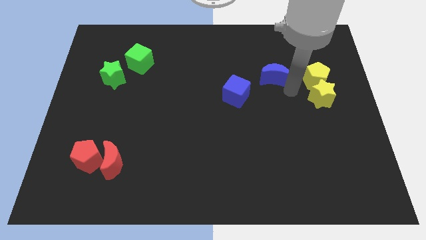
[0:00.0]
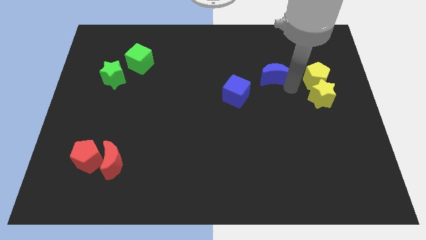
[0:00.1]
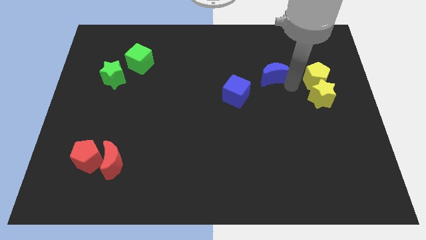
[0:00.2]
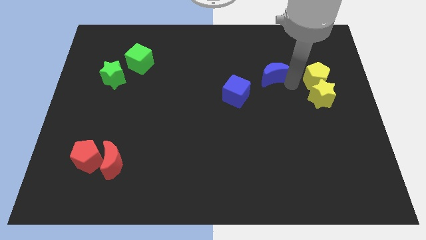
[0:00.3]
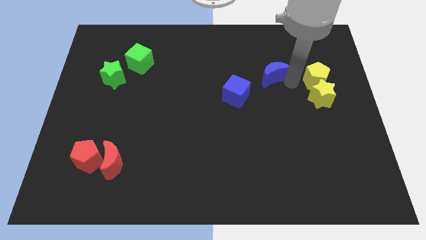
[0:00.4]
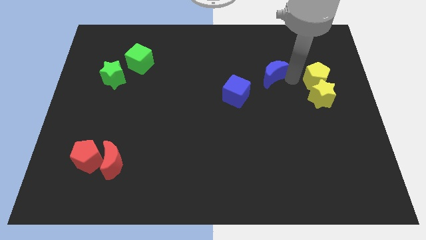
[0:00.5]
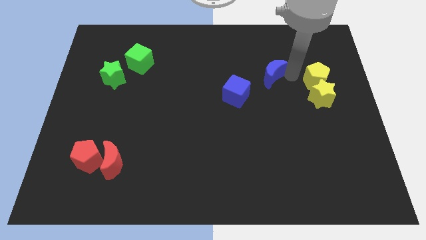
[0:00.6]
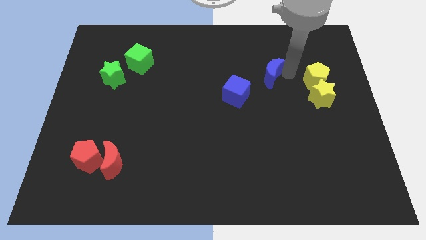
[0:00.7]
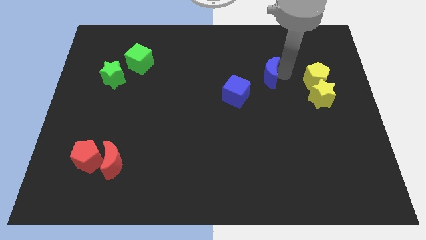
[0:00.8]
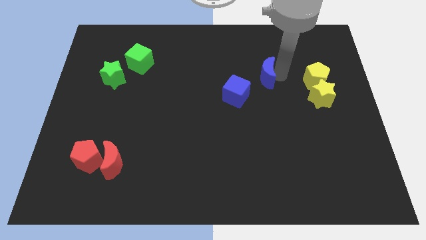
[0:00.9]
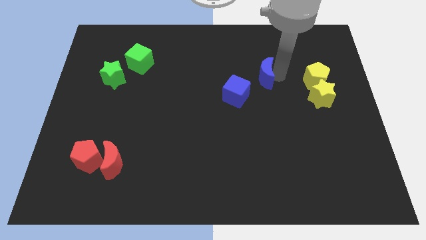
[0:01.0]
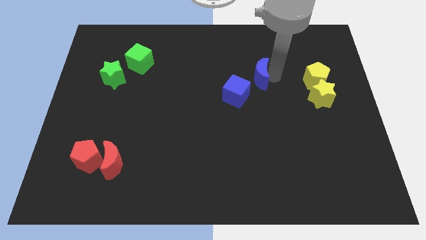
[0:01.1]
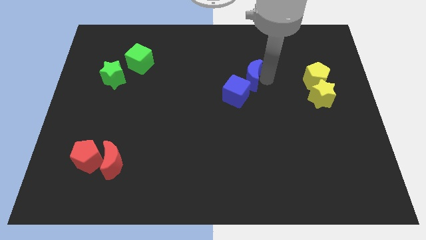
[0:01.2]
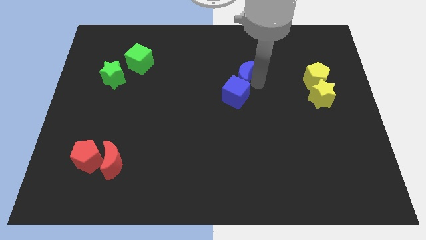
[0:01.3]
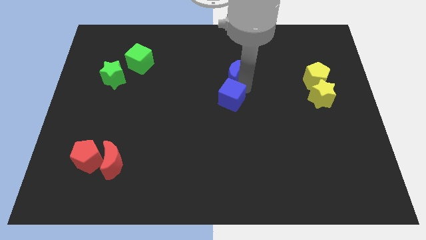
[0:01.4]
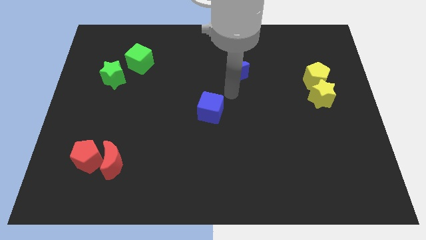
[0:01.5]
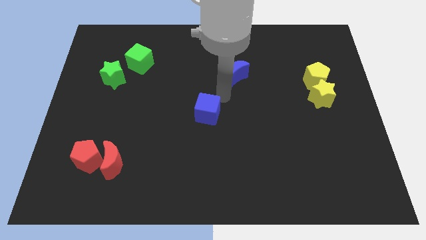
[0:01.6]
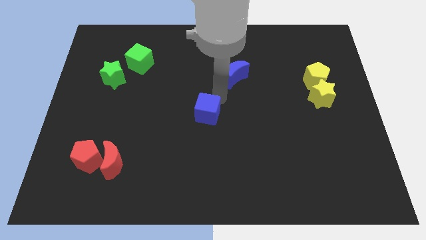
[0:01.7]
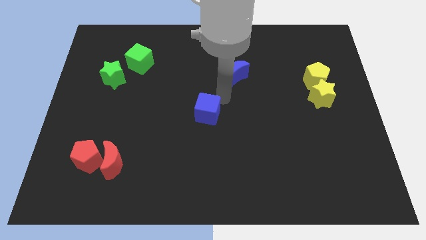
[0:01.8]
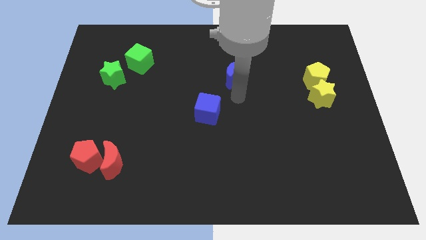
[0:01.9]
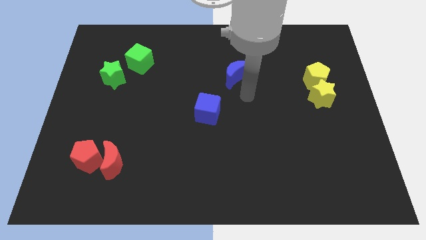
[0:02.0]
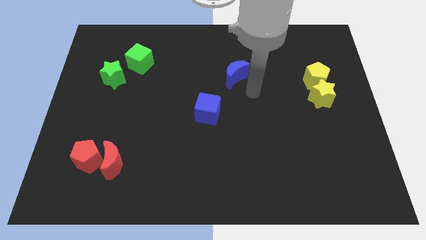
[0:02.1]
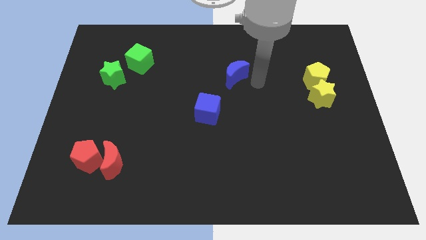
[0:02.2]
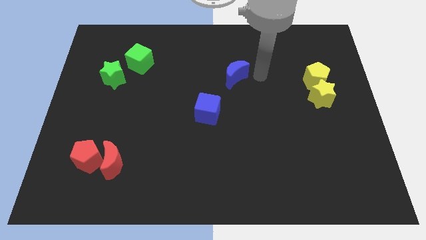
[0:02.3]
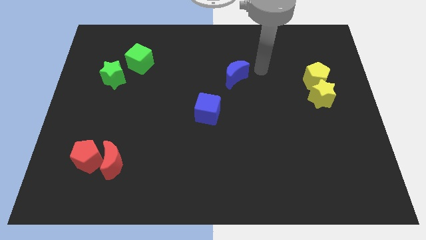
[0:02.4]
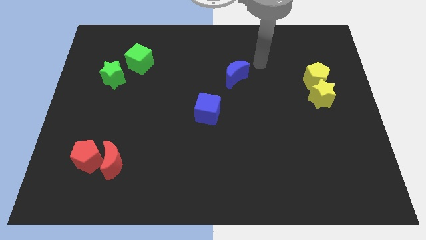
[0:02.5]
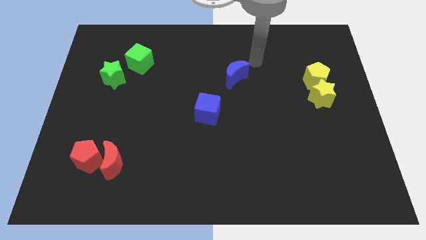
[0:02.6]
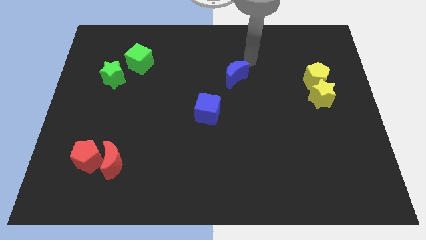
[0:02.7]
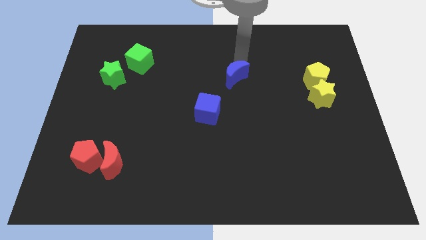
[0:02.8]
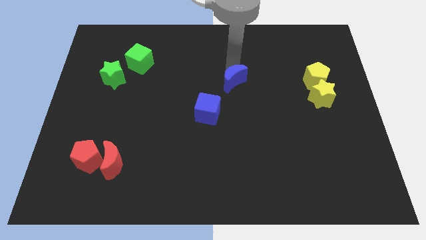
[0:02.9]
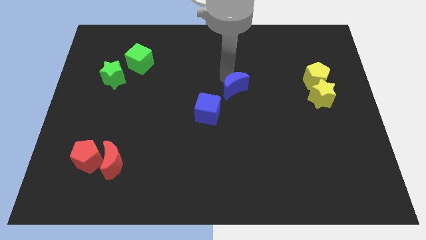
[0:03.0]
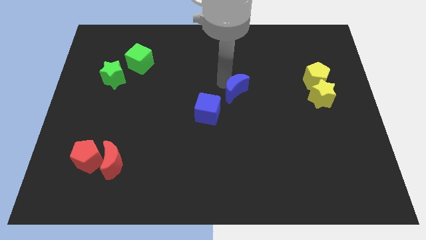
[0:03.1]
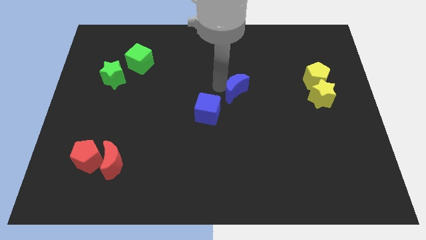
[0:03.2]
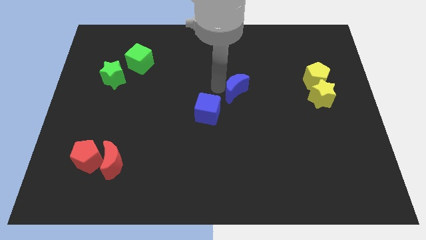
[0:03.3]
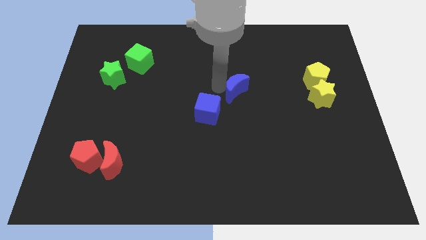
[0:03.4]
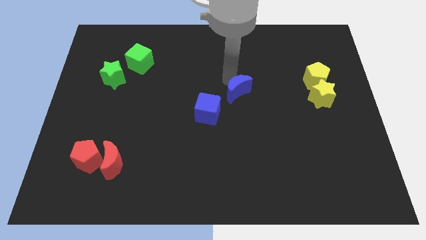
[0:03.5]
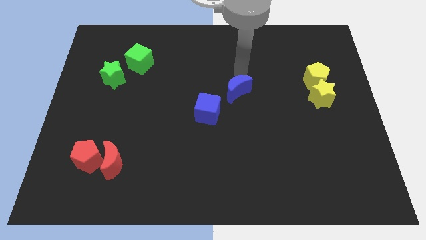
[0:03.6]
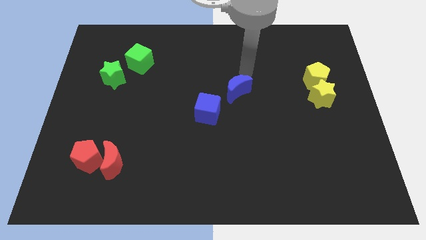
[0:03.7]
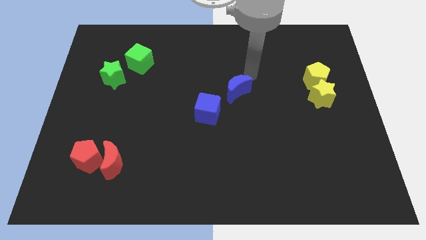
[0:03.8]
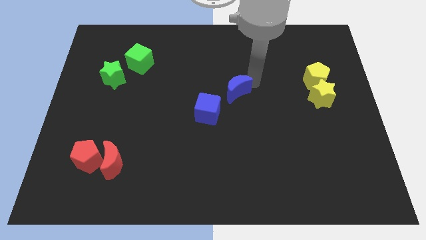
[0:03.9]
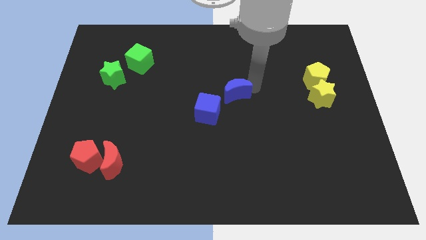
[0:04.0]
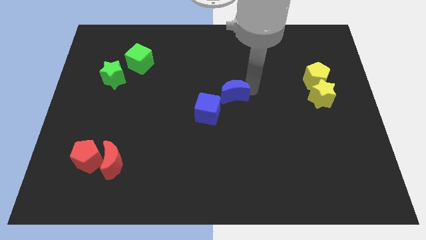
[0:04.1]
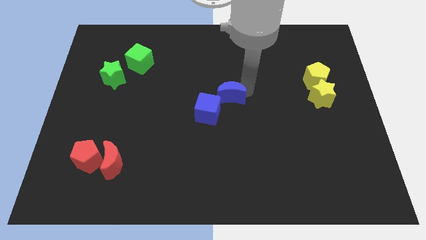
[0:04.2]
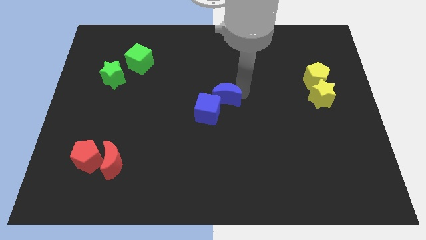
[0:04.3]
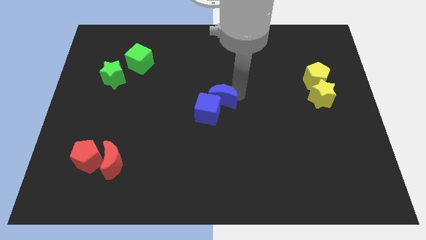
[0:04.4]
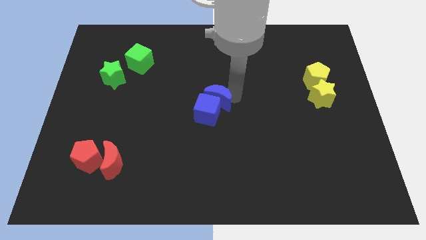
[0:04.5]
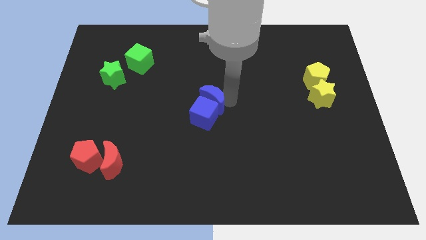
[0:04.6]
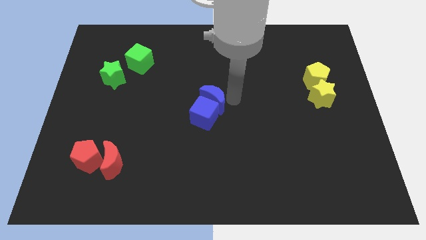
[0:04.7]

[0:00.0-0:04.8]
place both the blue blocks at the center of the board

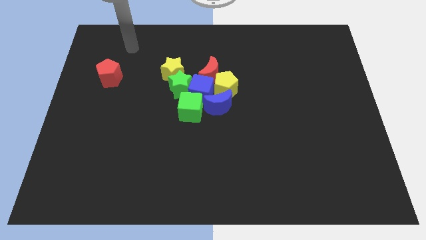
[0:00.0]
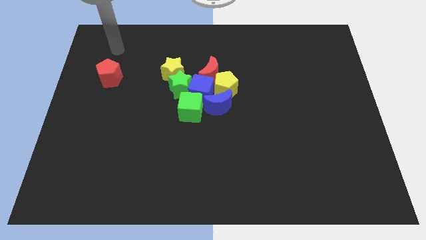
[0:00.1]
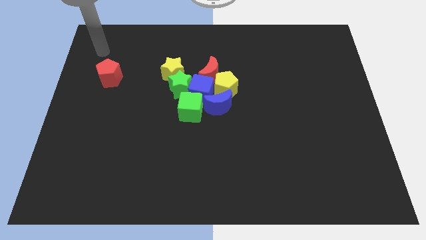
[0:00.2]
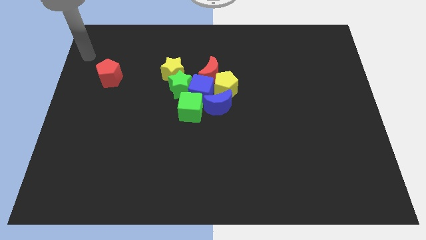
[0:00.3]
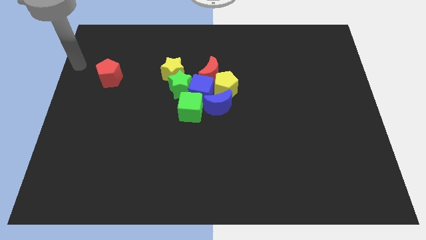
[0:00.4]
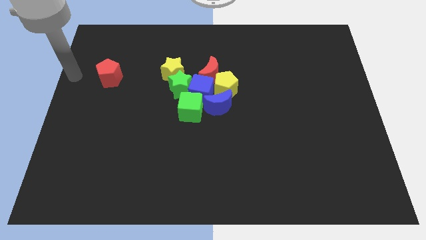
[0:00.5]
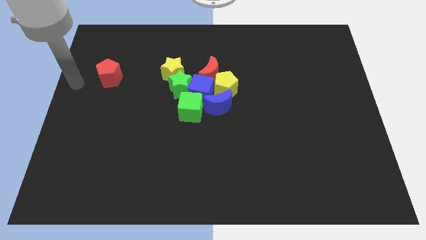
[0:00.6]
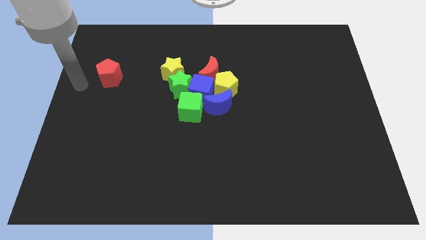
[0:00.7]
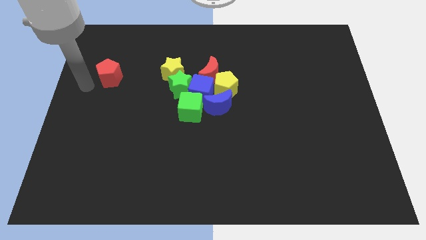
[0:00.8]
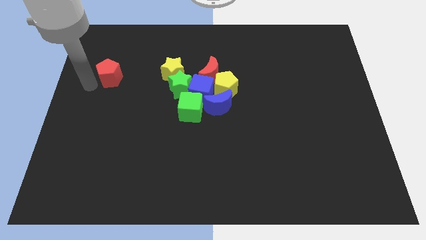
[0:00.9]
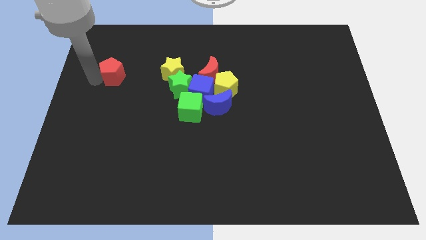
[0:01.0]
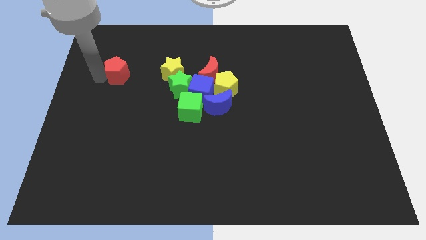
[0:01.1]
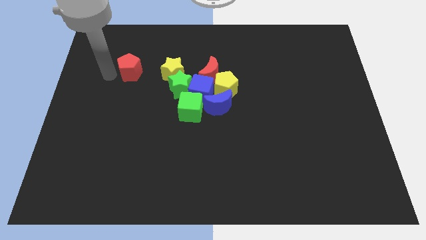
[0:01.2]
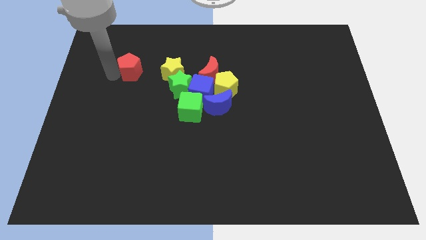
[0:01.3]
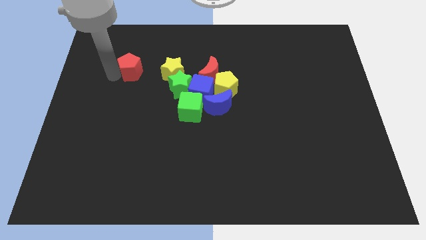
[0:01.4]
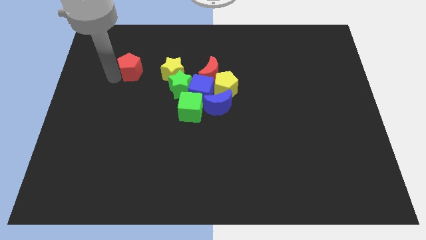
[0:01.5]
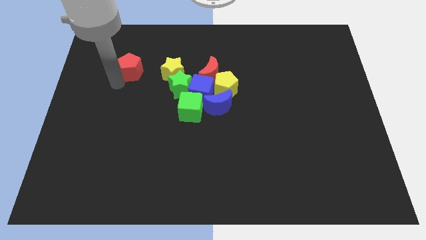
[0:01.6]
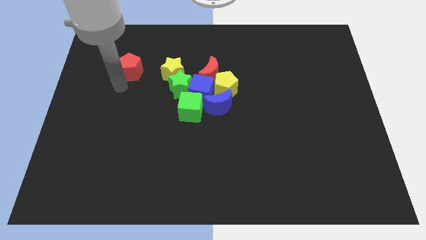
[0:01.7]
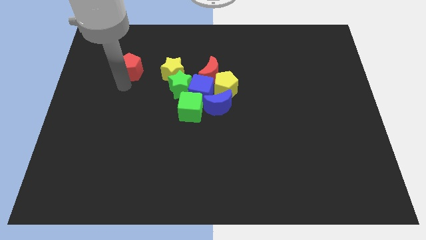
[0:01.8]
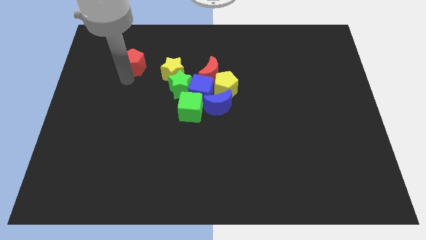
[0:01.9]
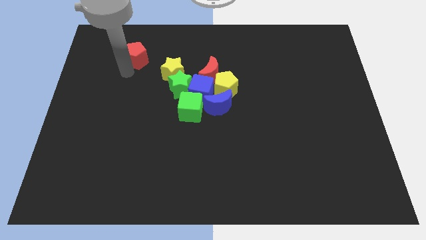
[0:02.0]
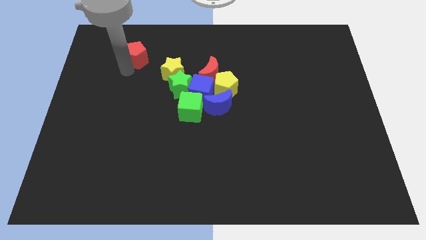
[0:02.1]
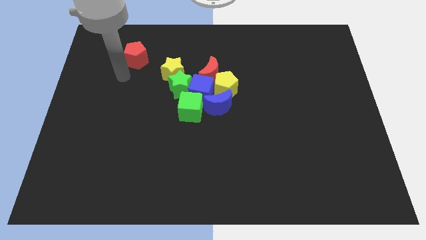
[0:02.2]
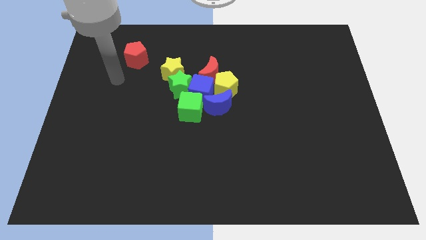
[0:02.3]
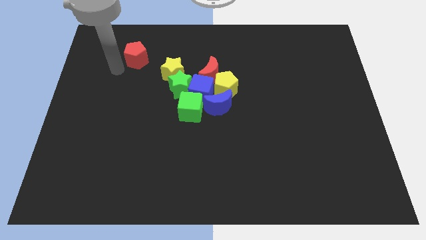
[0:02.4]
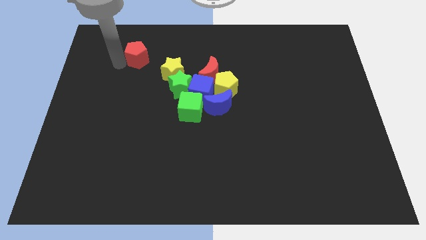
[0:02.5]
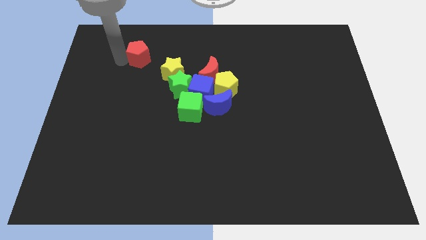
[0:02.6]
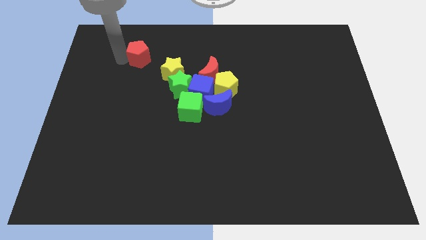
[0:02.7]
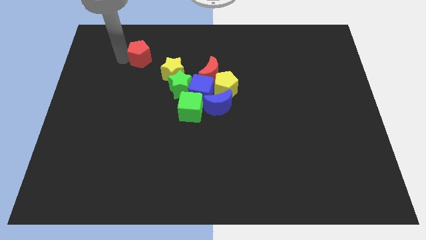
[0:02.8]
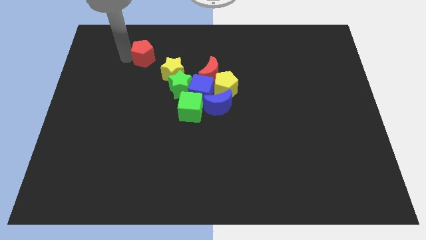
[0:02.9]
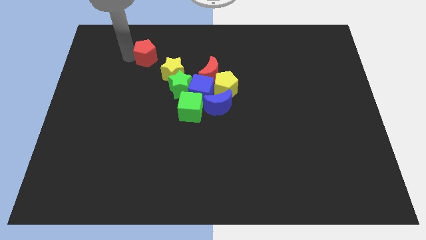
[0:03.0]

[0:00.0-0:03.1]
move the red pentagon upwards of the board

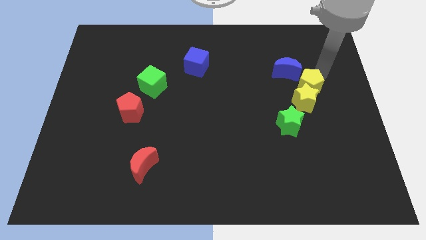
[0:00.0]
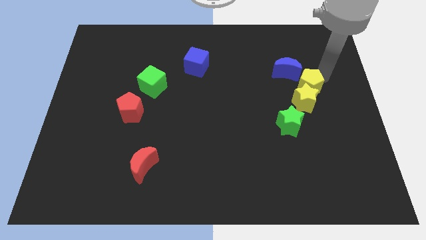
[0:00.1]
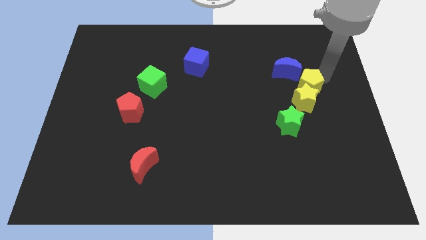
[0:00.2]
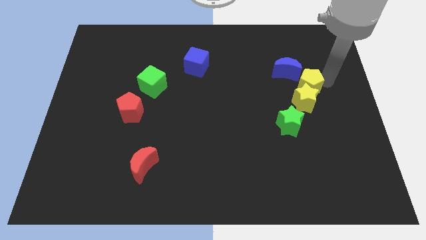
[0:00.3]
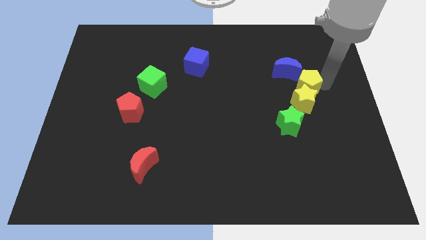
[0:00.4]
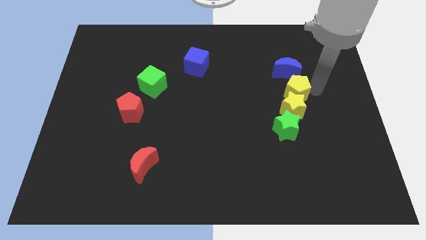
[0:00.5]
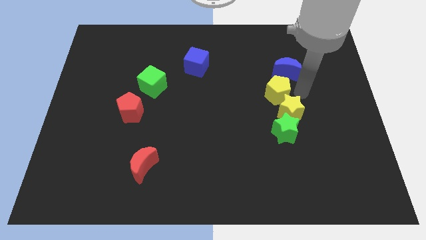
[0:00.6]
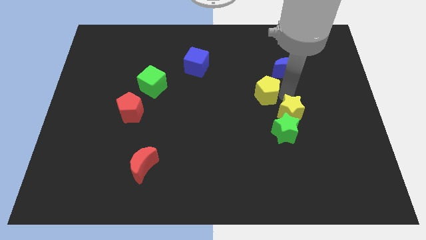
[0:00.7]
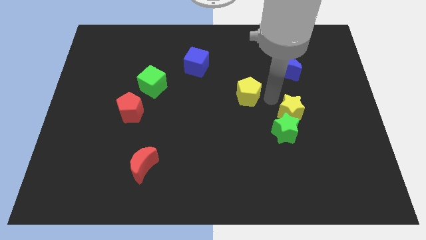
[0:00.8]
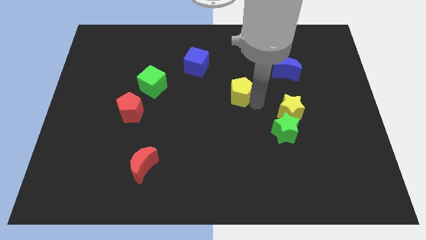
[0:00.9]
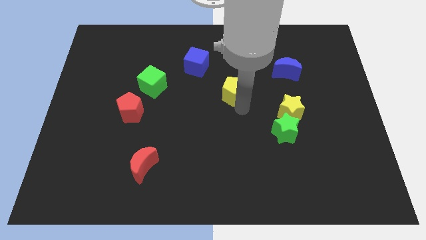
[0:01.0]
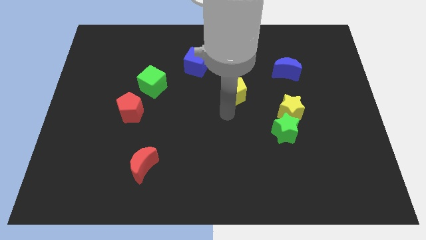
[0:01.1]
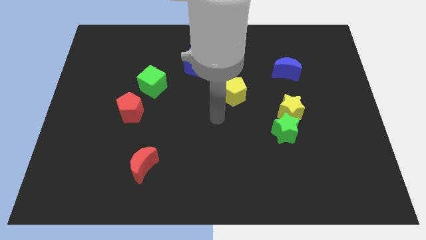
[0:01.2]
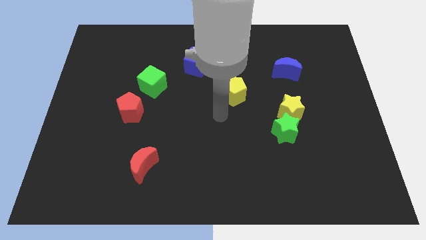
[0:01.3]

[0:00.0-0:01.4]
push the yellow pentagon towards the left side slightly
